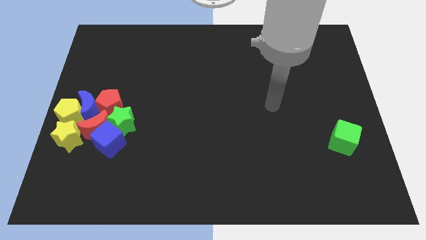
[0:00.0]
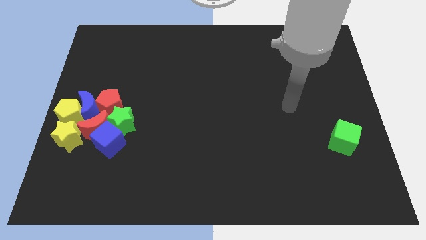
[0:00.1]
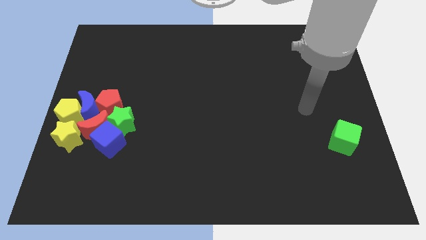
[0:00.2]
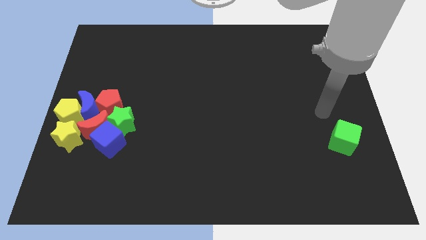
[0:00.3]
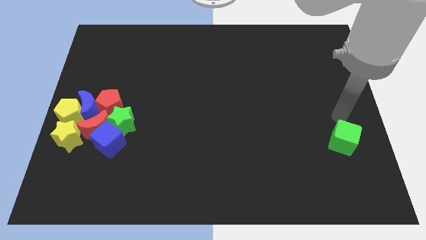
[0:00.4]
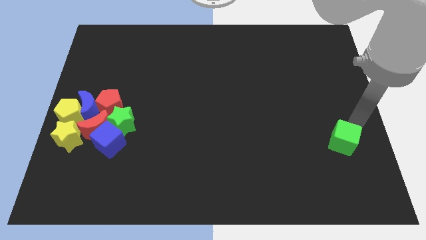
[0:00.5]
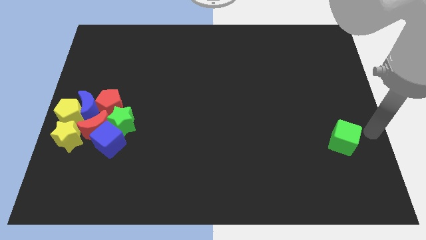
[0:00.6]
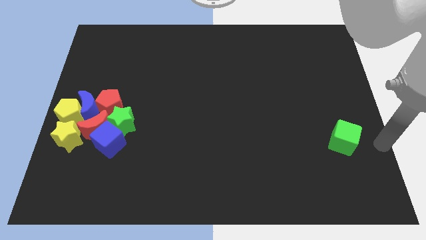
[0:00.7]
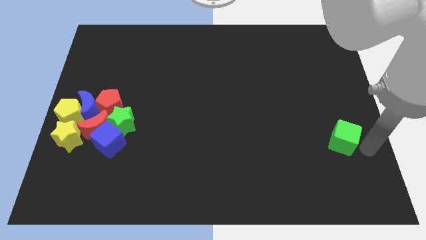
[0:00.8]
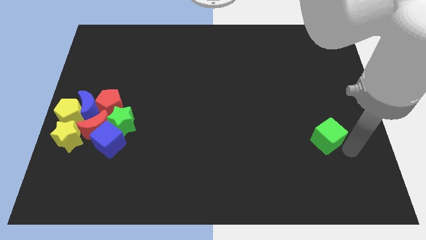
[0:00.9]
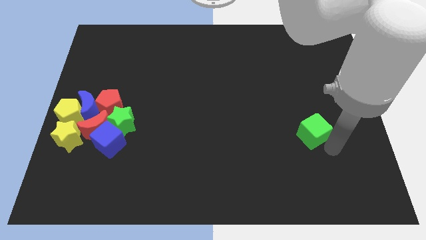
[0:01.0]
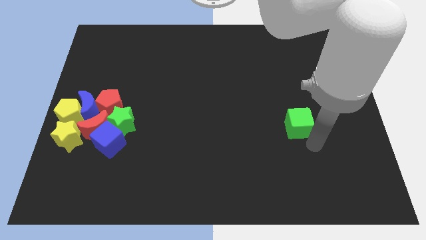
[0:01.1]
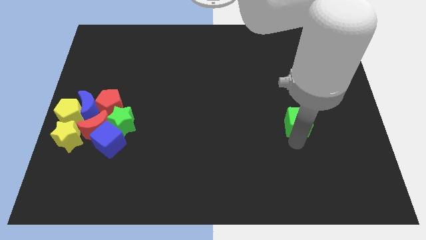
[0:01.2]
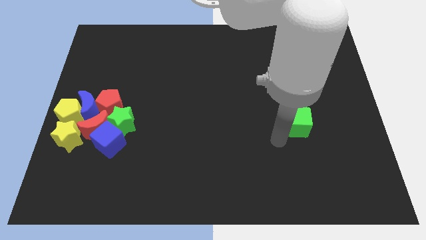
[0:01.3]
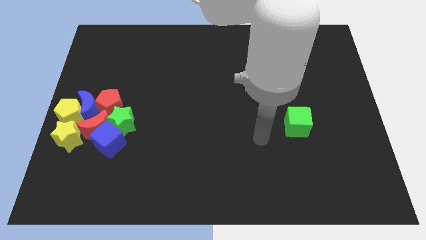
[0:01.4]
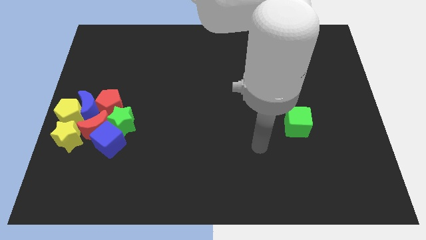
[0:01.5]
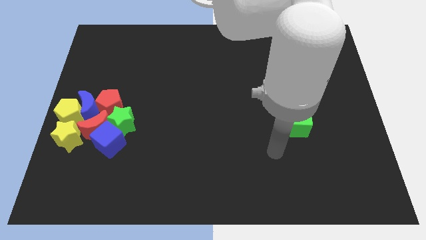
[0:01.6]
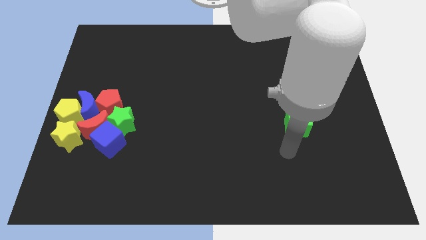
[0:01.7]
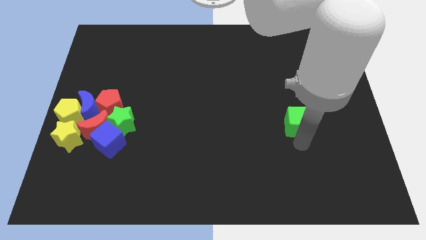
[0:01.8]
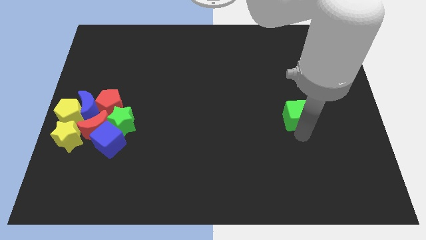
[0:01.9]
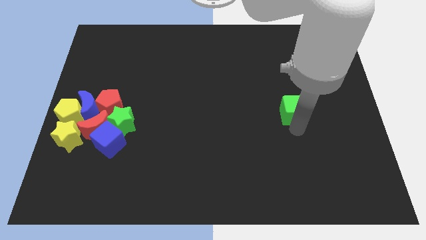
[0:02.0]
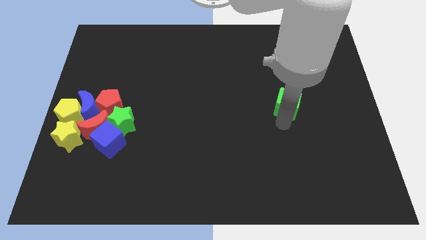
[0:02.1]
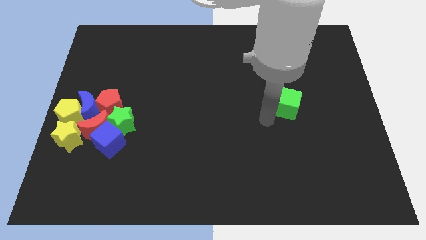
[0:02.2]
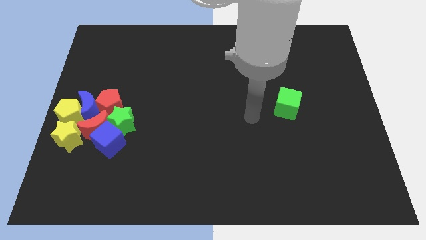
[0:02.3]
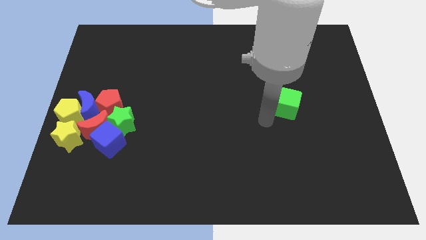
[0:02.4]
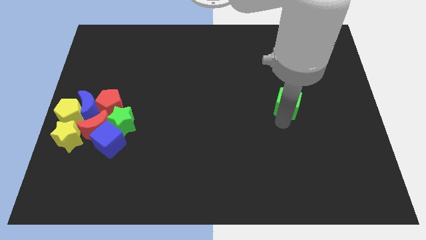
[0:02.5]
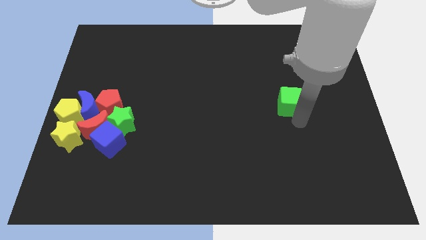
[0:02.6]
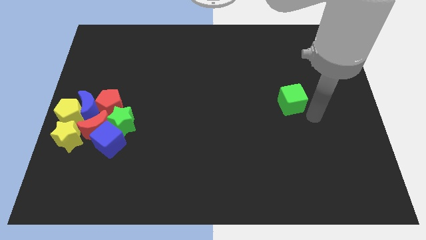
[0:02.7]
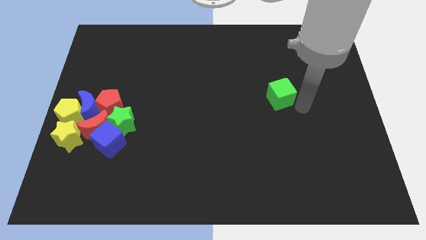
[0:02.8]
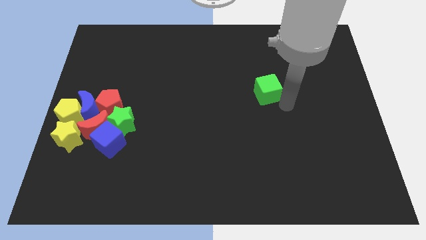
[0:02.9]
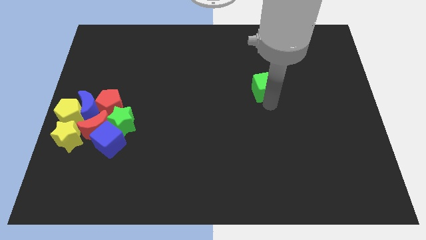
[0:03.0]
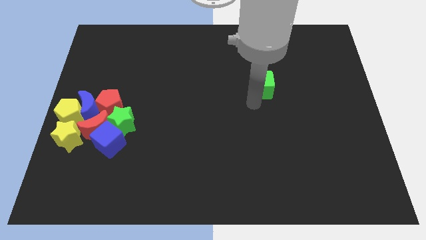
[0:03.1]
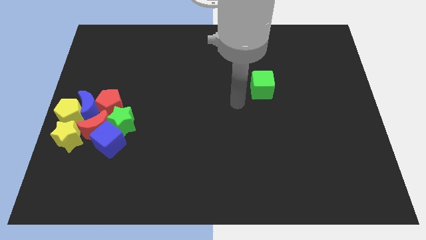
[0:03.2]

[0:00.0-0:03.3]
move the green cube upwards

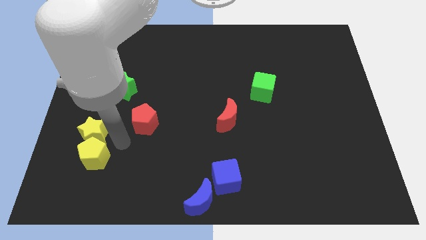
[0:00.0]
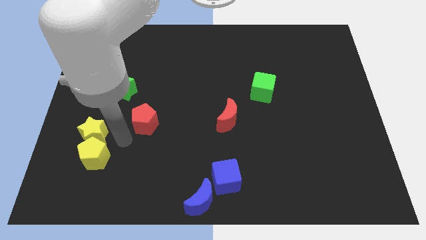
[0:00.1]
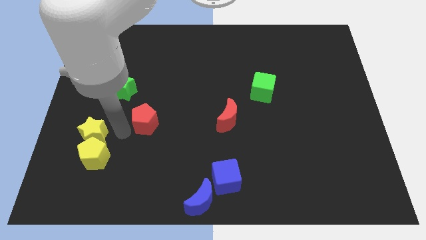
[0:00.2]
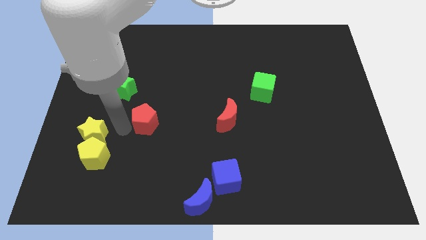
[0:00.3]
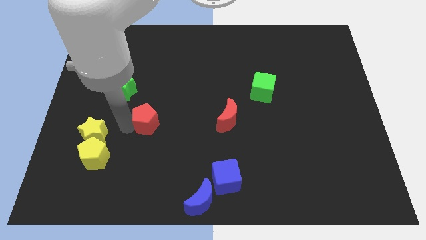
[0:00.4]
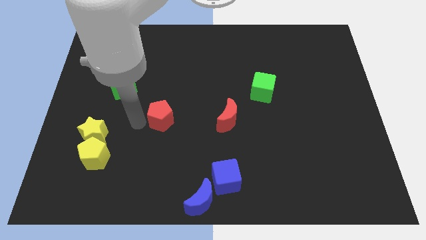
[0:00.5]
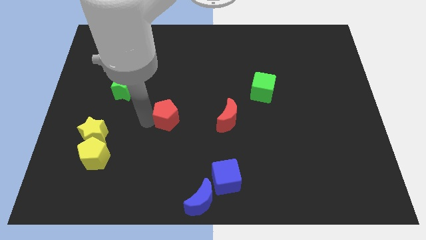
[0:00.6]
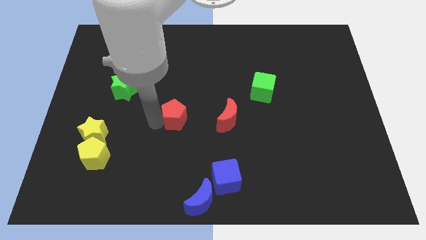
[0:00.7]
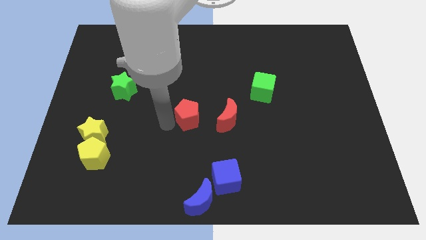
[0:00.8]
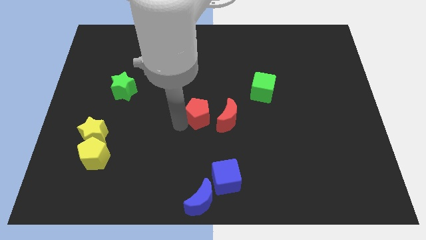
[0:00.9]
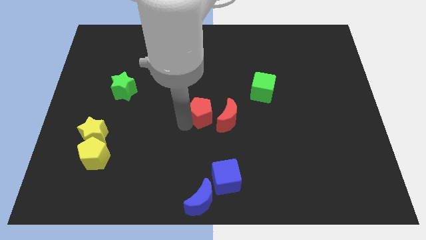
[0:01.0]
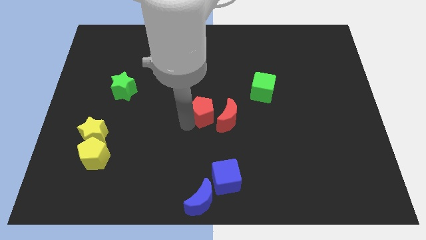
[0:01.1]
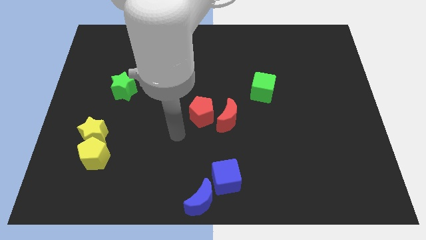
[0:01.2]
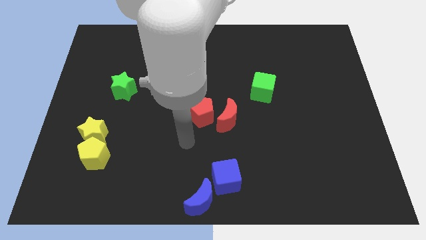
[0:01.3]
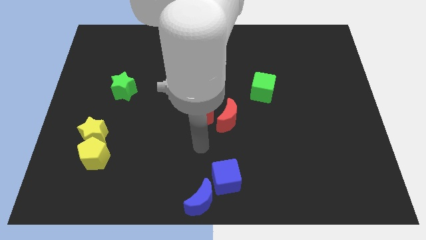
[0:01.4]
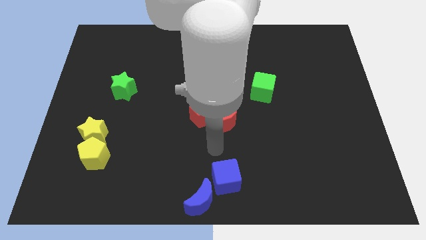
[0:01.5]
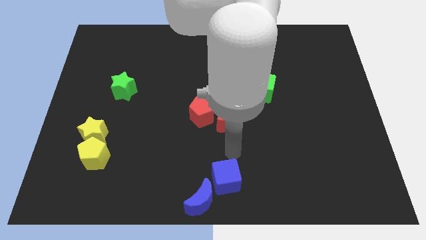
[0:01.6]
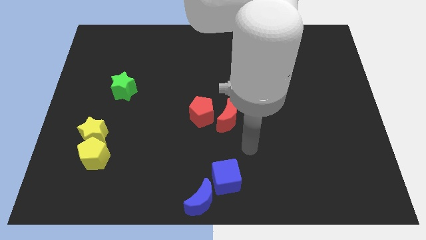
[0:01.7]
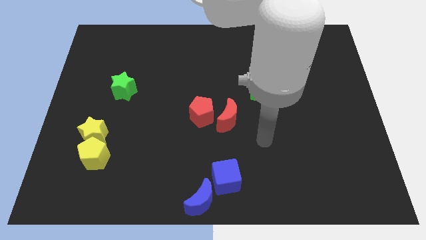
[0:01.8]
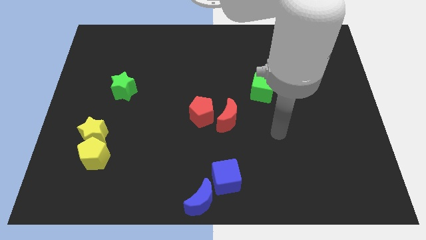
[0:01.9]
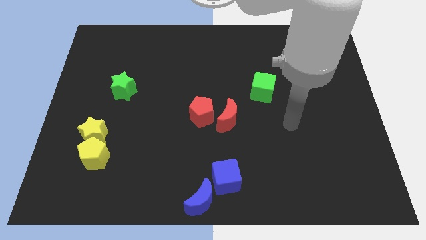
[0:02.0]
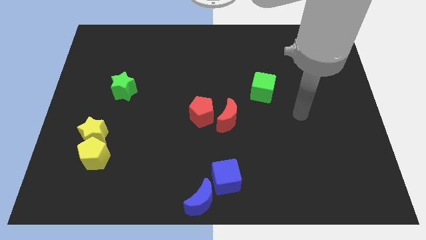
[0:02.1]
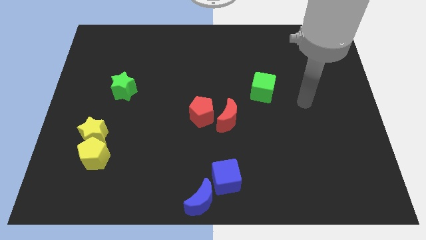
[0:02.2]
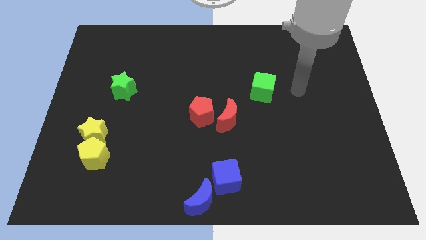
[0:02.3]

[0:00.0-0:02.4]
push the red pentagon into red moon

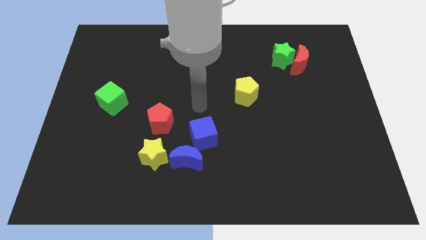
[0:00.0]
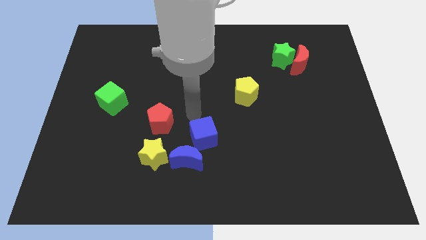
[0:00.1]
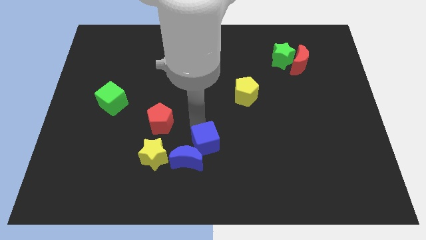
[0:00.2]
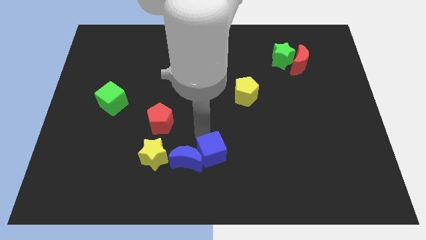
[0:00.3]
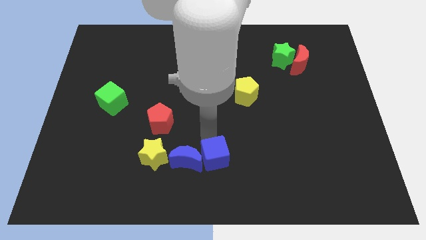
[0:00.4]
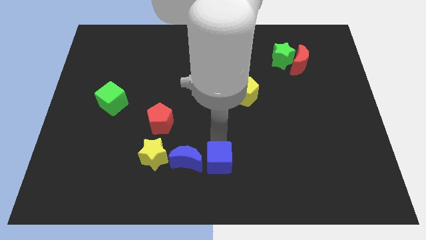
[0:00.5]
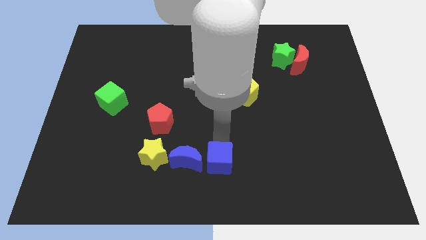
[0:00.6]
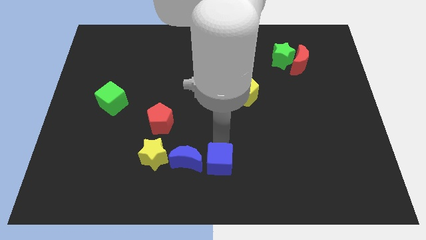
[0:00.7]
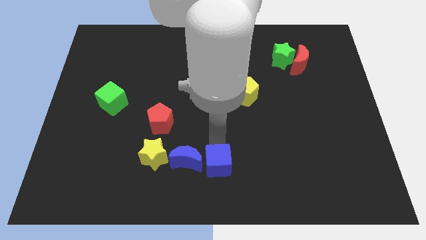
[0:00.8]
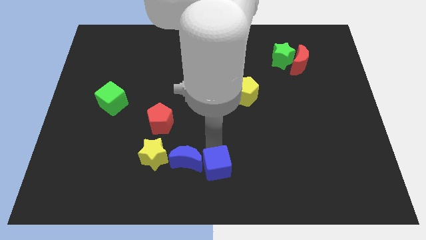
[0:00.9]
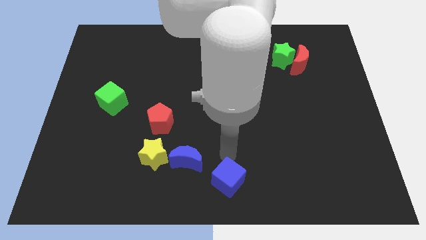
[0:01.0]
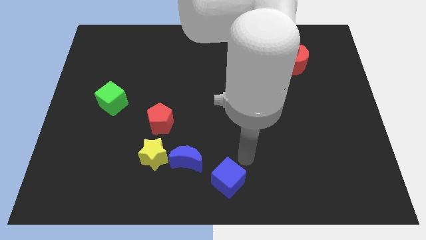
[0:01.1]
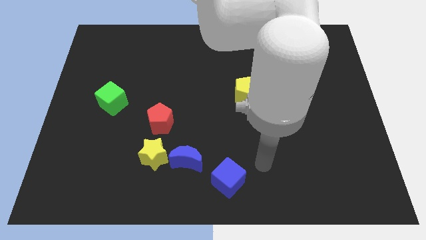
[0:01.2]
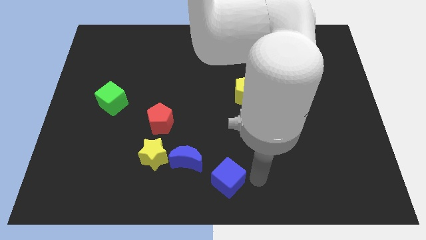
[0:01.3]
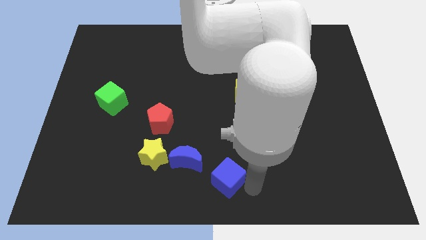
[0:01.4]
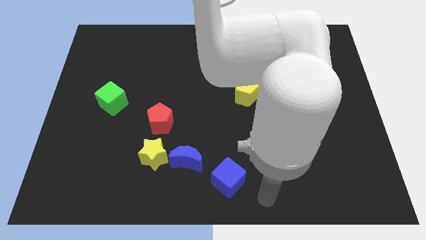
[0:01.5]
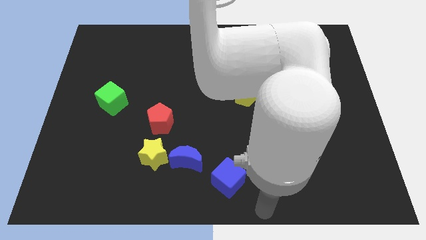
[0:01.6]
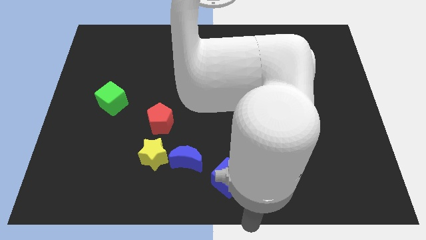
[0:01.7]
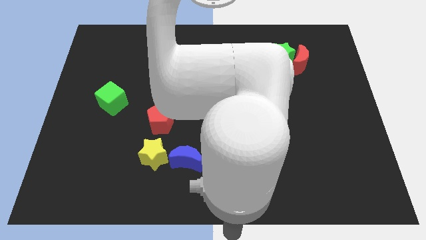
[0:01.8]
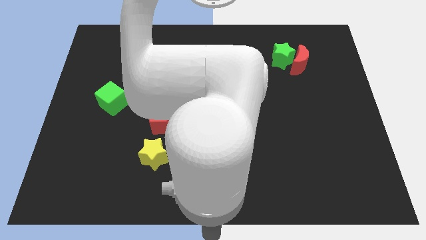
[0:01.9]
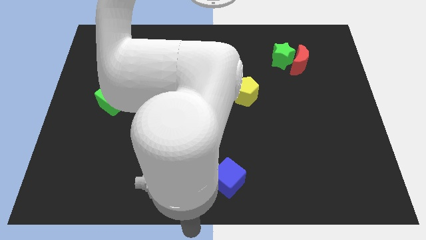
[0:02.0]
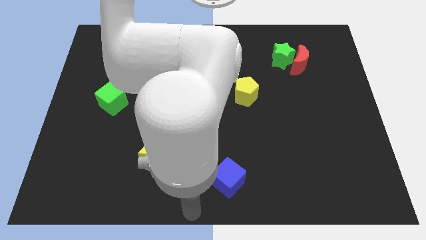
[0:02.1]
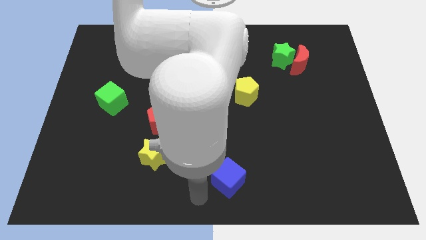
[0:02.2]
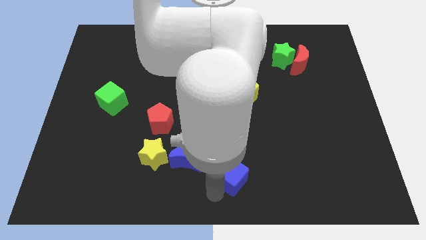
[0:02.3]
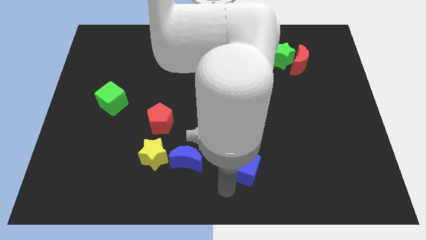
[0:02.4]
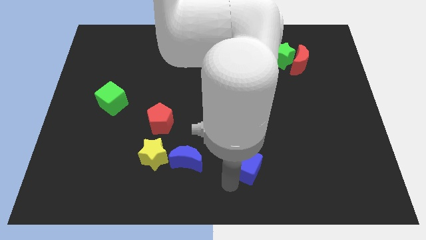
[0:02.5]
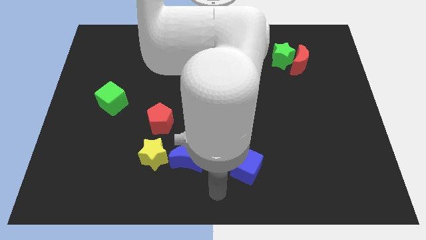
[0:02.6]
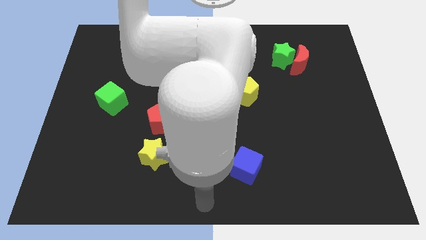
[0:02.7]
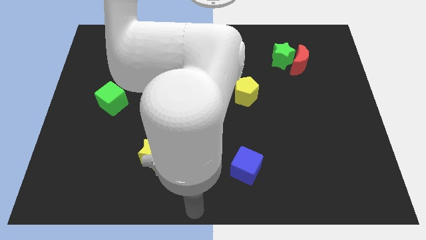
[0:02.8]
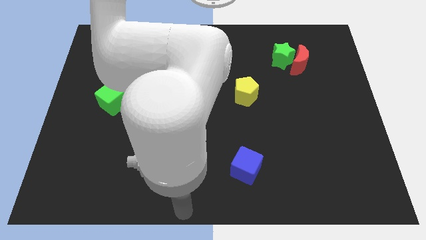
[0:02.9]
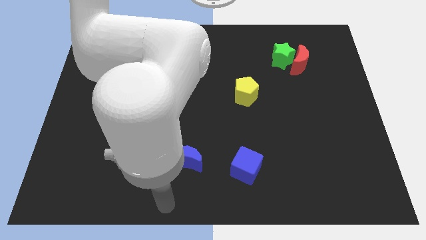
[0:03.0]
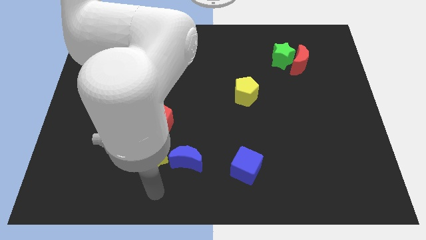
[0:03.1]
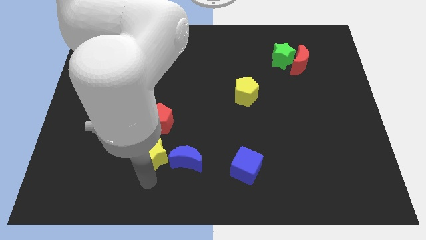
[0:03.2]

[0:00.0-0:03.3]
move the blue cube to the right side of the blue crescent
